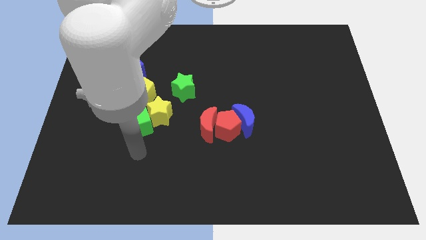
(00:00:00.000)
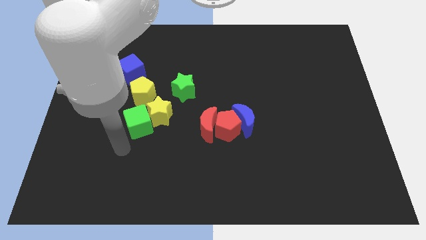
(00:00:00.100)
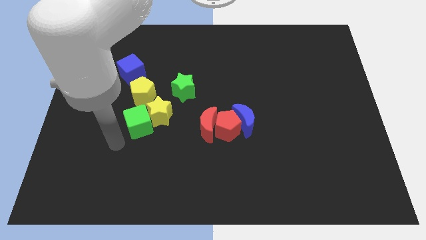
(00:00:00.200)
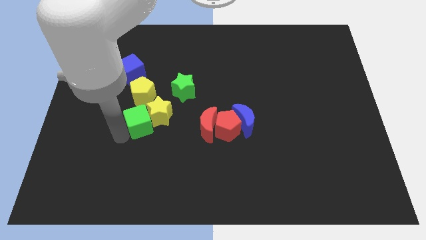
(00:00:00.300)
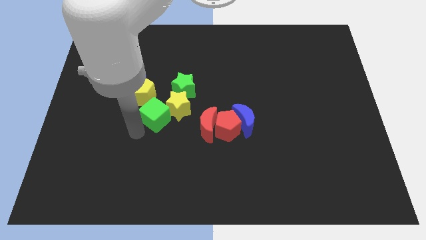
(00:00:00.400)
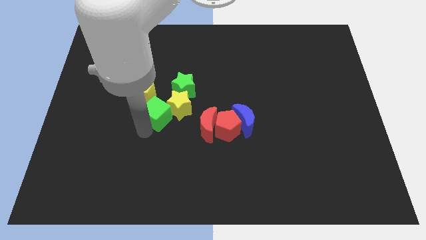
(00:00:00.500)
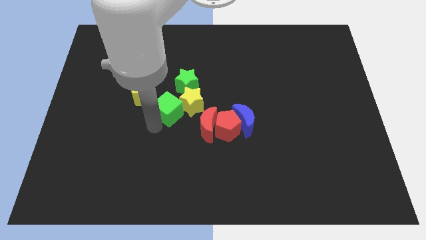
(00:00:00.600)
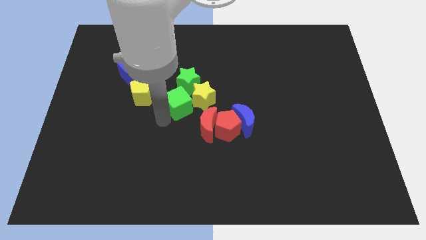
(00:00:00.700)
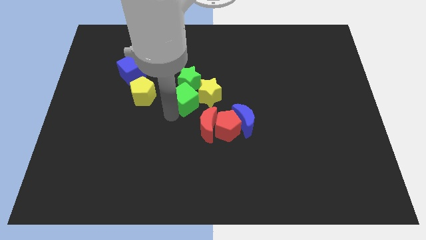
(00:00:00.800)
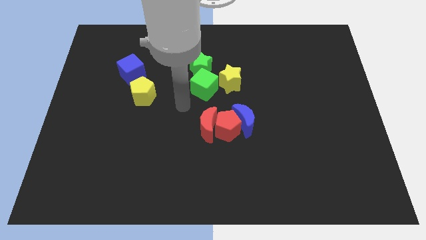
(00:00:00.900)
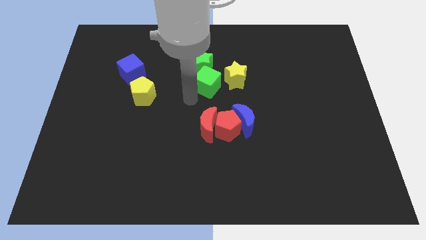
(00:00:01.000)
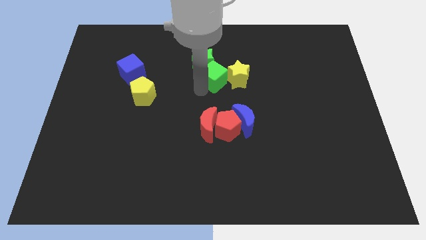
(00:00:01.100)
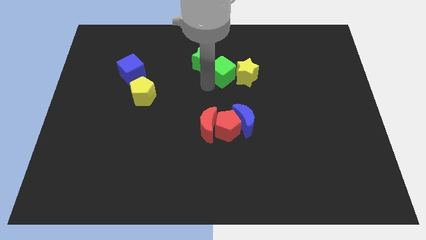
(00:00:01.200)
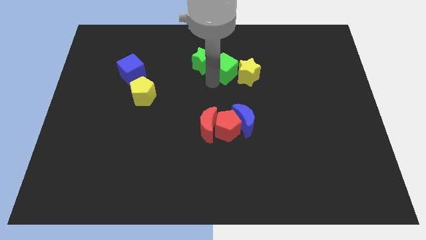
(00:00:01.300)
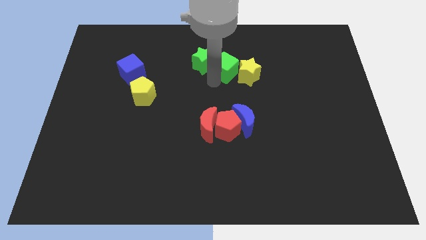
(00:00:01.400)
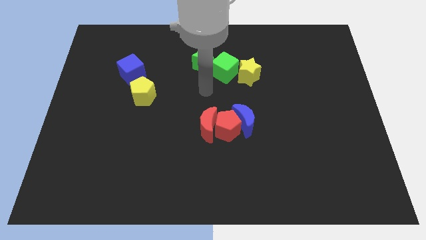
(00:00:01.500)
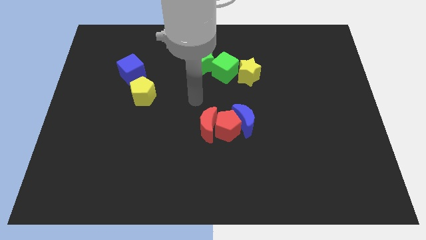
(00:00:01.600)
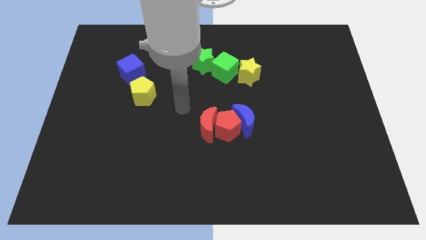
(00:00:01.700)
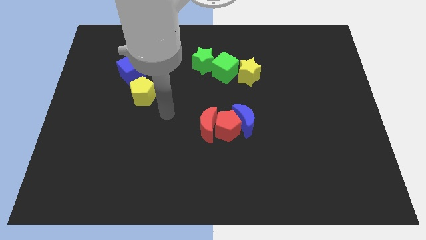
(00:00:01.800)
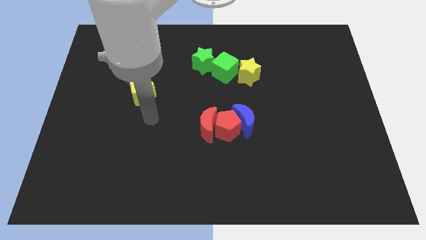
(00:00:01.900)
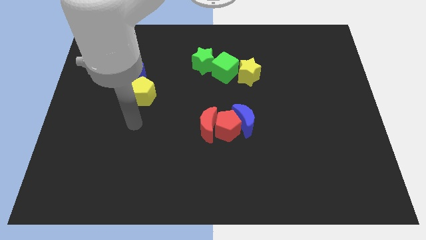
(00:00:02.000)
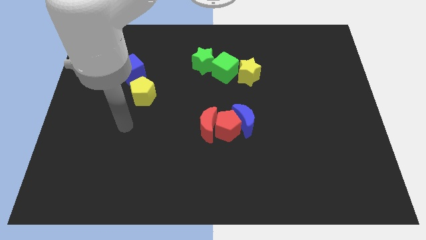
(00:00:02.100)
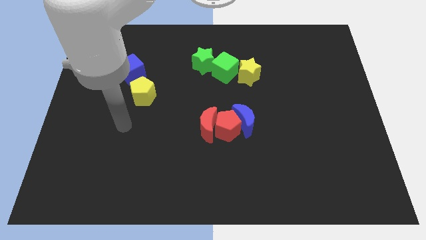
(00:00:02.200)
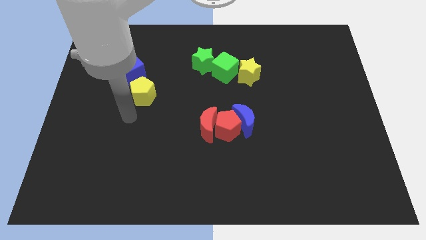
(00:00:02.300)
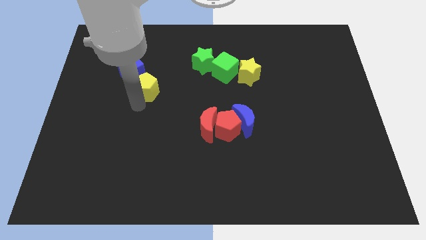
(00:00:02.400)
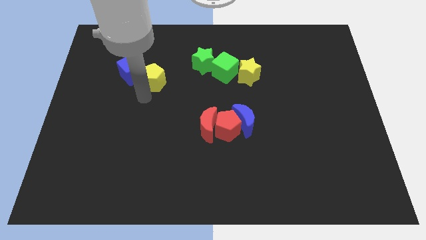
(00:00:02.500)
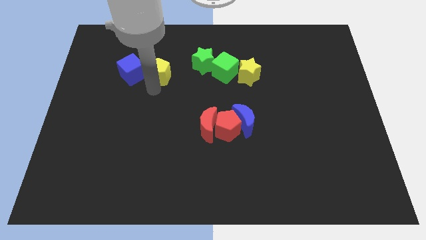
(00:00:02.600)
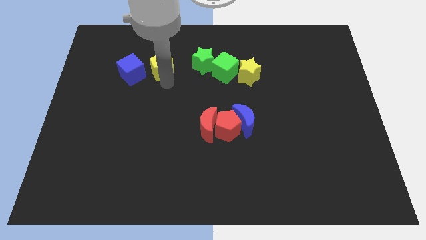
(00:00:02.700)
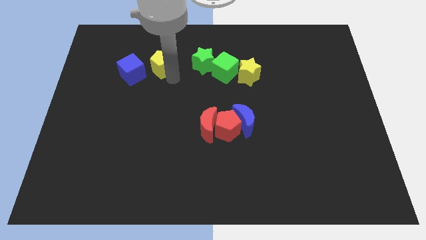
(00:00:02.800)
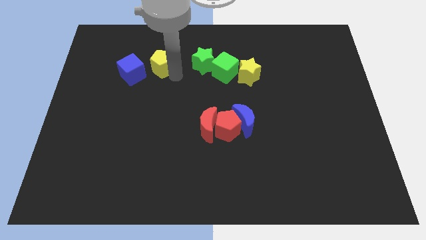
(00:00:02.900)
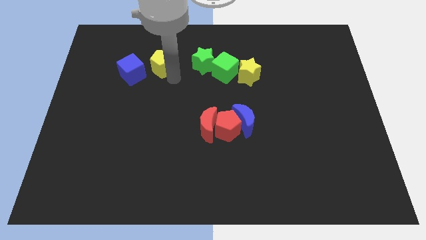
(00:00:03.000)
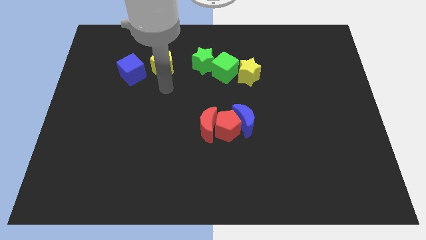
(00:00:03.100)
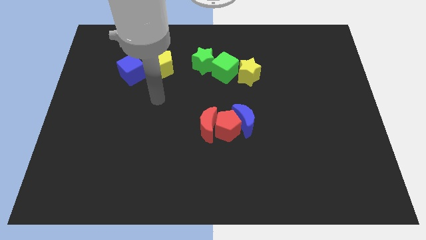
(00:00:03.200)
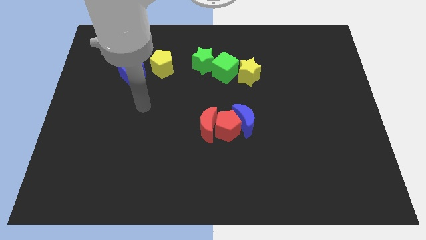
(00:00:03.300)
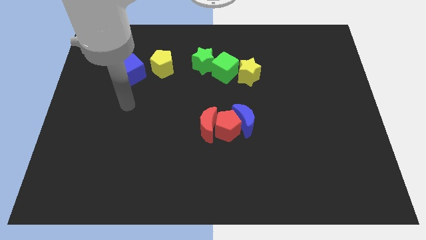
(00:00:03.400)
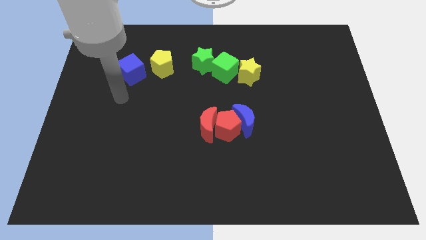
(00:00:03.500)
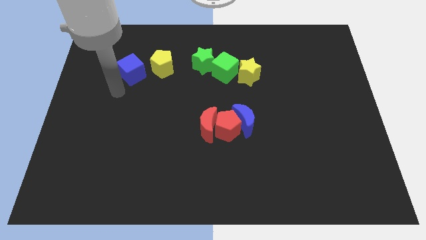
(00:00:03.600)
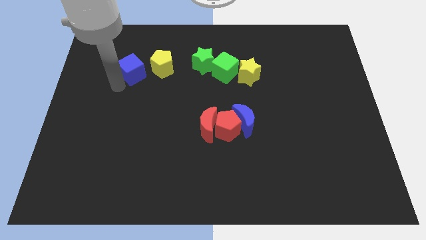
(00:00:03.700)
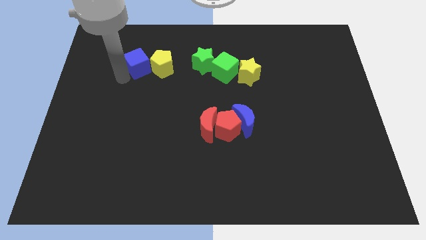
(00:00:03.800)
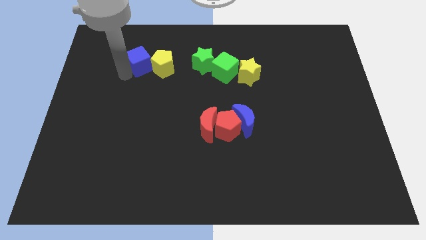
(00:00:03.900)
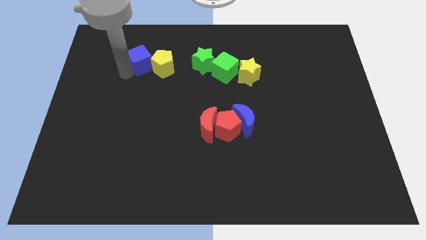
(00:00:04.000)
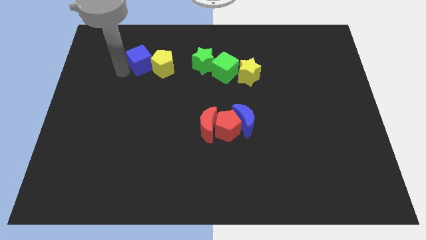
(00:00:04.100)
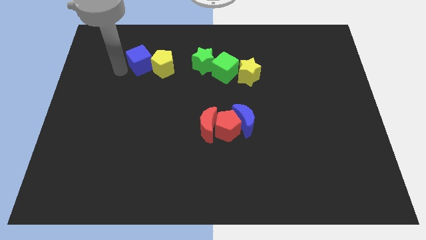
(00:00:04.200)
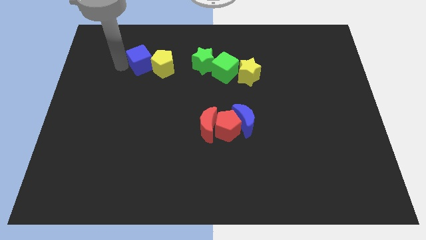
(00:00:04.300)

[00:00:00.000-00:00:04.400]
place the blue cube and the yellow pentagon to the left side of the green star

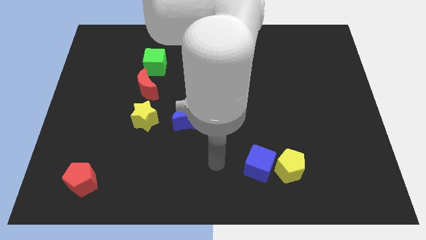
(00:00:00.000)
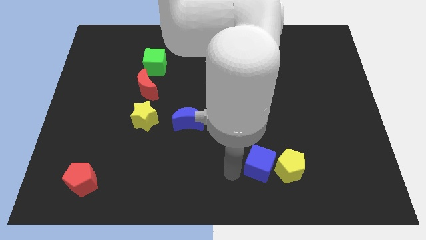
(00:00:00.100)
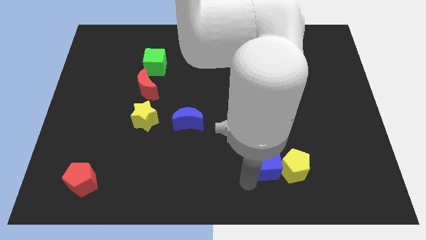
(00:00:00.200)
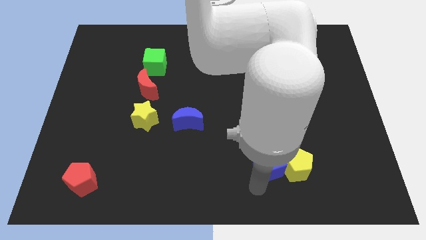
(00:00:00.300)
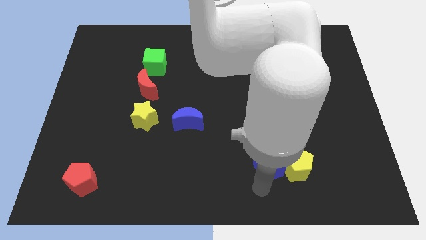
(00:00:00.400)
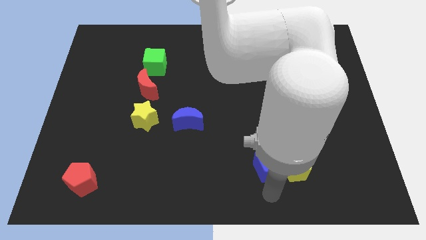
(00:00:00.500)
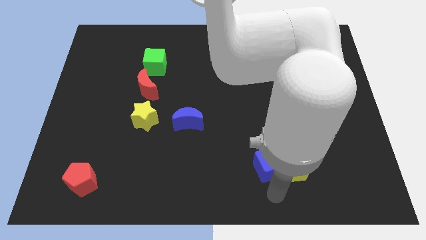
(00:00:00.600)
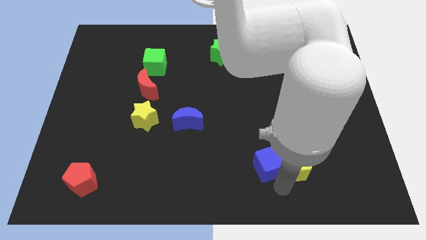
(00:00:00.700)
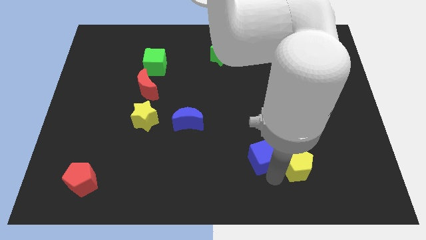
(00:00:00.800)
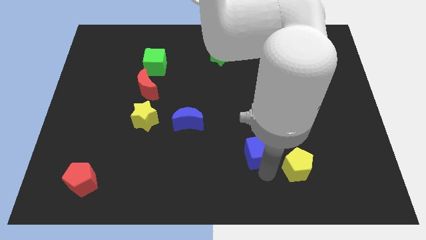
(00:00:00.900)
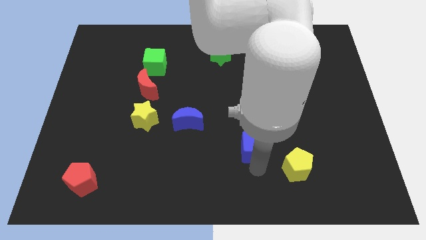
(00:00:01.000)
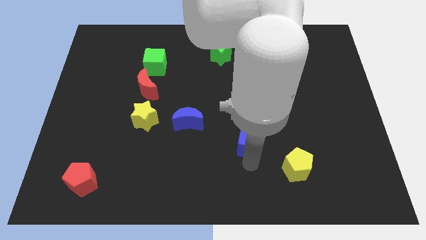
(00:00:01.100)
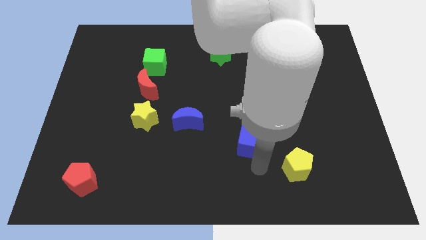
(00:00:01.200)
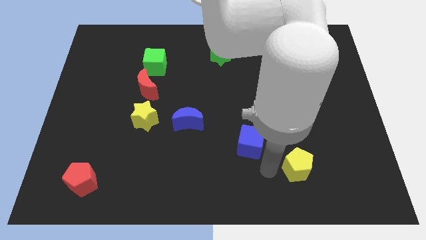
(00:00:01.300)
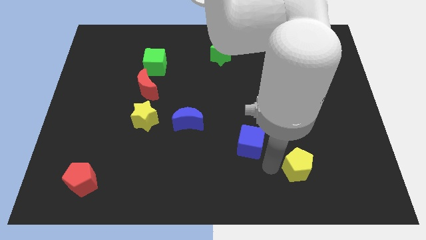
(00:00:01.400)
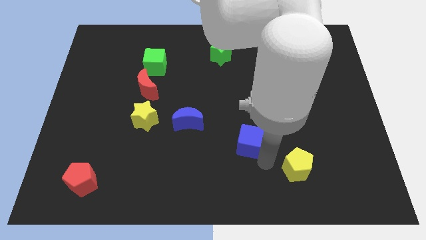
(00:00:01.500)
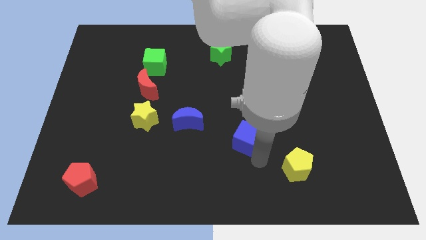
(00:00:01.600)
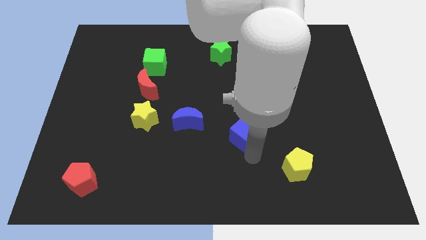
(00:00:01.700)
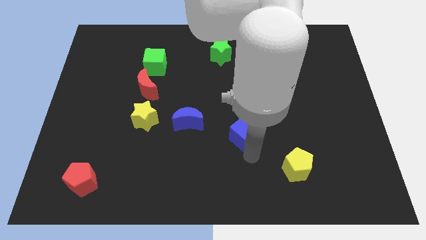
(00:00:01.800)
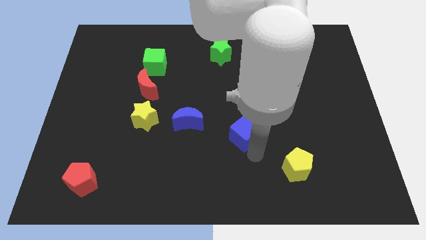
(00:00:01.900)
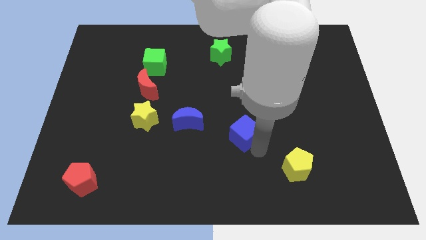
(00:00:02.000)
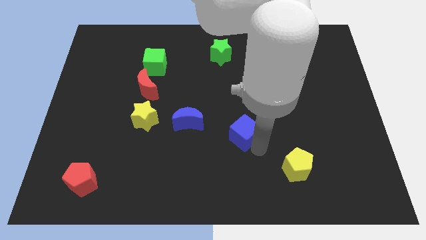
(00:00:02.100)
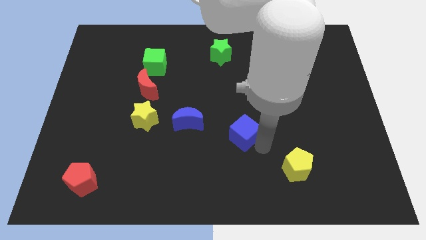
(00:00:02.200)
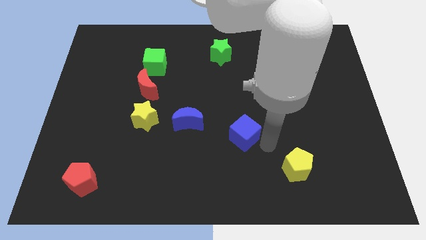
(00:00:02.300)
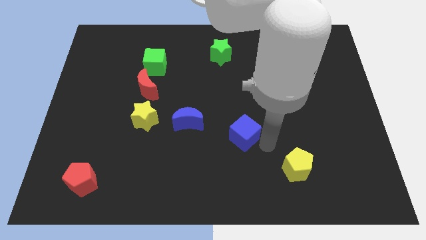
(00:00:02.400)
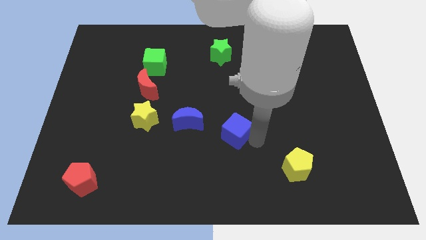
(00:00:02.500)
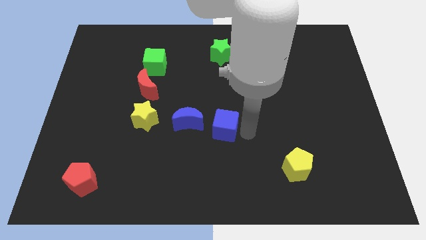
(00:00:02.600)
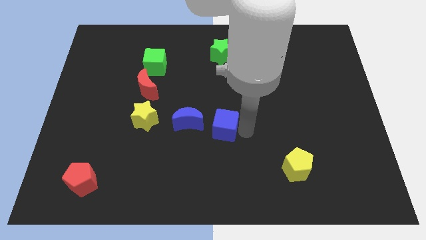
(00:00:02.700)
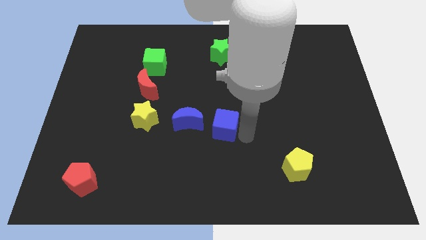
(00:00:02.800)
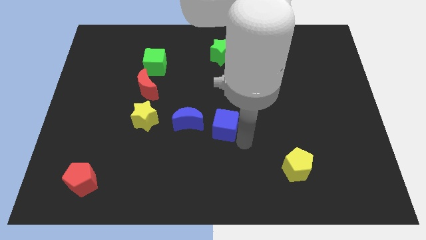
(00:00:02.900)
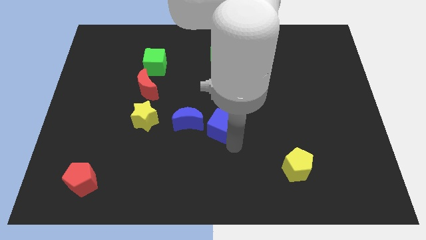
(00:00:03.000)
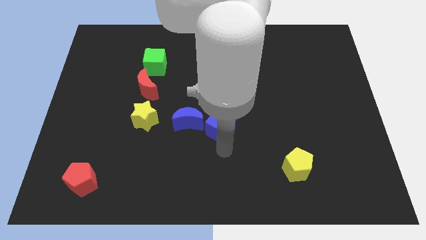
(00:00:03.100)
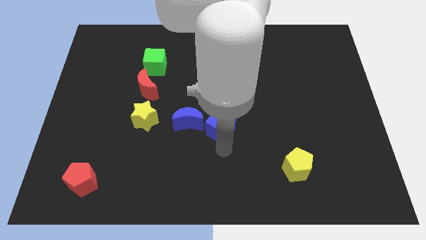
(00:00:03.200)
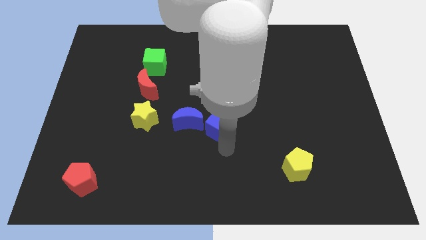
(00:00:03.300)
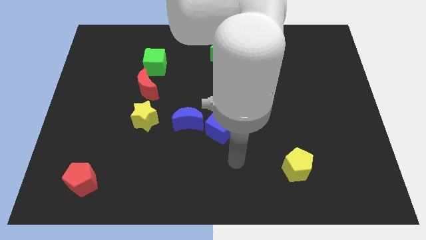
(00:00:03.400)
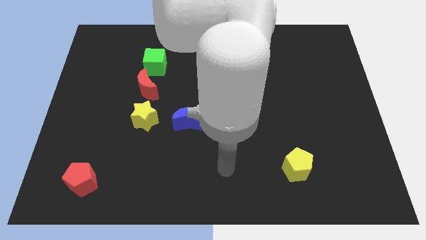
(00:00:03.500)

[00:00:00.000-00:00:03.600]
place the blue cube to the right of the blue moon

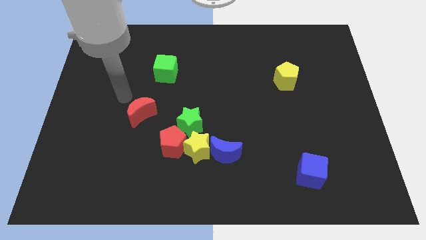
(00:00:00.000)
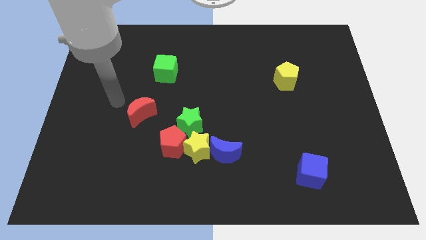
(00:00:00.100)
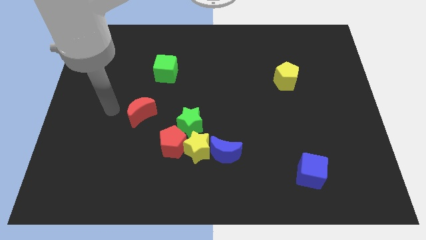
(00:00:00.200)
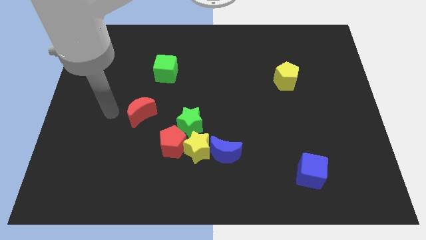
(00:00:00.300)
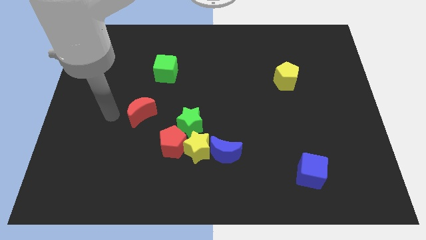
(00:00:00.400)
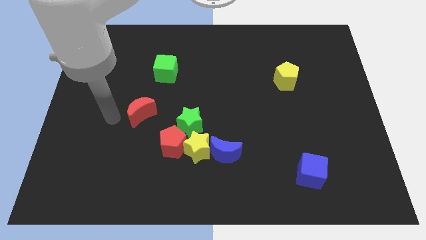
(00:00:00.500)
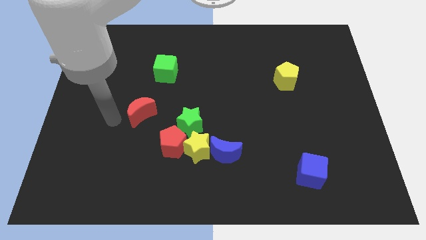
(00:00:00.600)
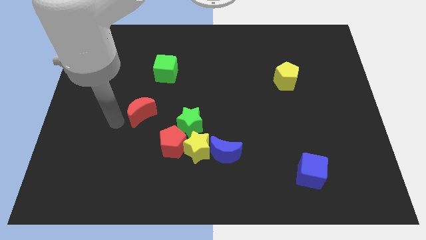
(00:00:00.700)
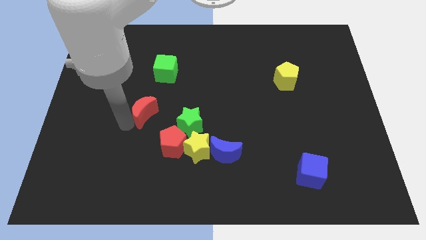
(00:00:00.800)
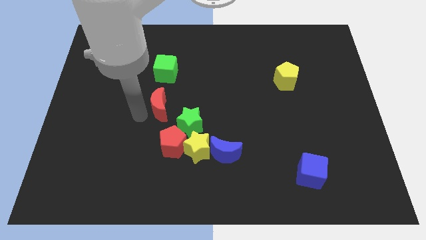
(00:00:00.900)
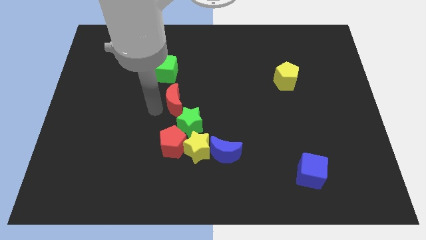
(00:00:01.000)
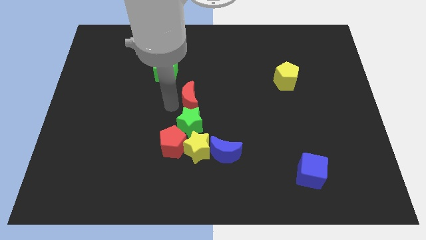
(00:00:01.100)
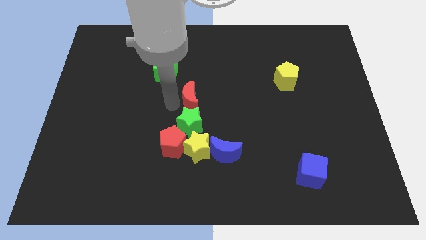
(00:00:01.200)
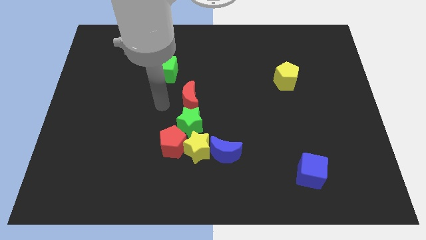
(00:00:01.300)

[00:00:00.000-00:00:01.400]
push the red crescent at the top of the green star
